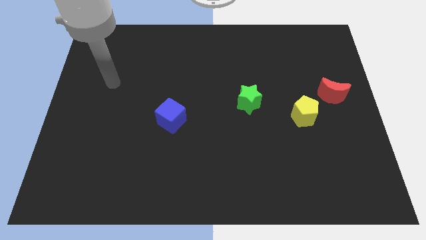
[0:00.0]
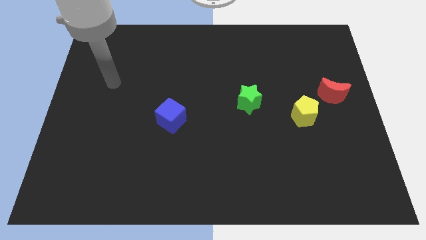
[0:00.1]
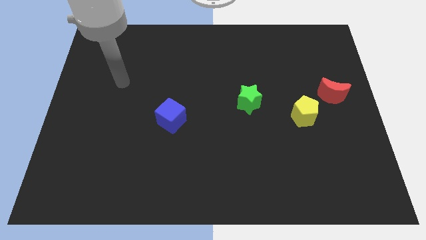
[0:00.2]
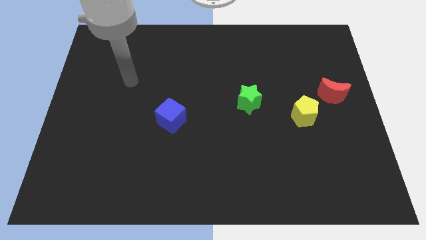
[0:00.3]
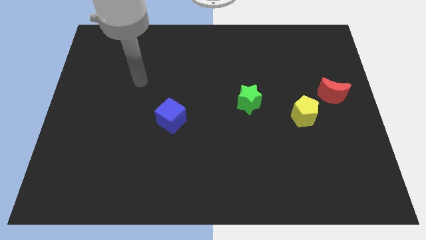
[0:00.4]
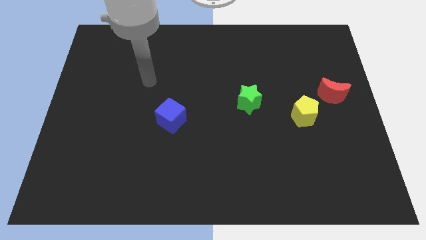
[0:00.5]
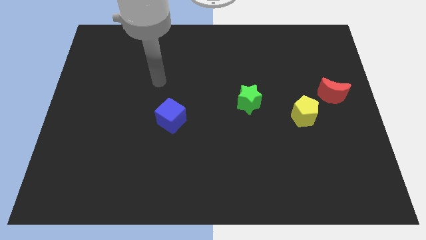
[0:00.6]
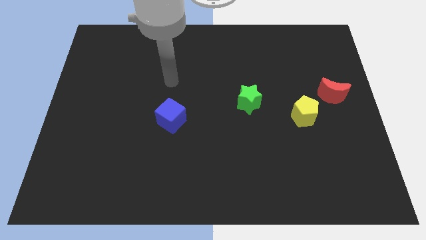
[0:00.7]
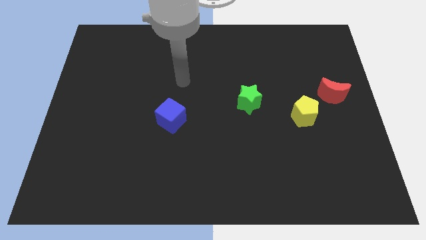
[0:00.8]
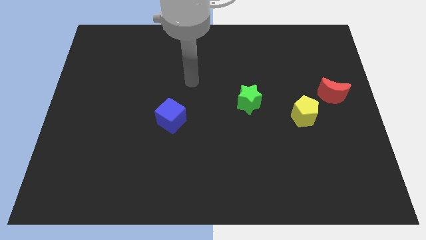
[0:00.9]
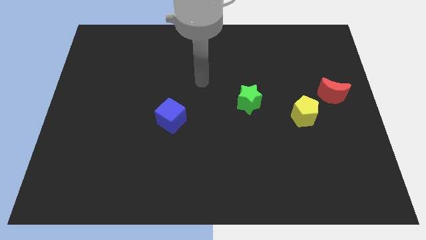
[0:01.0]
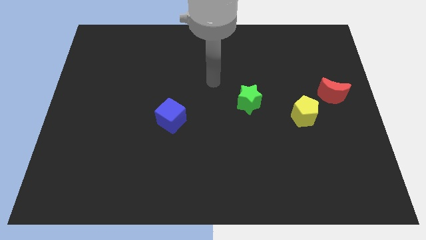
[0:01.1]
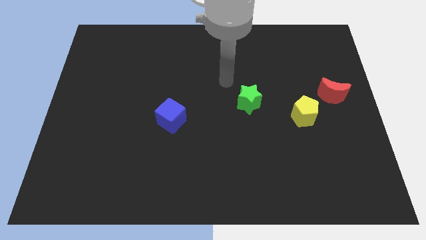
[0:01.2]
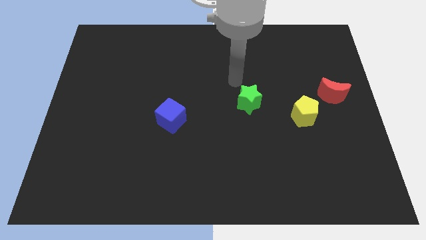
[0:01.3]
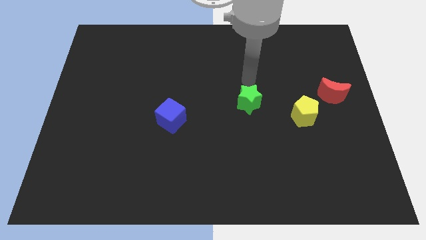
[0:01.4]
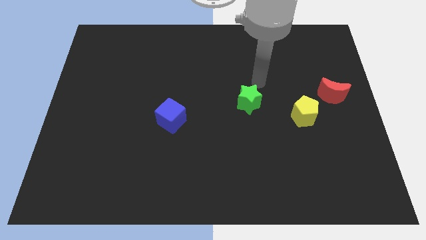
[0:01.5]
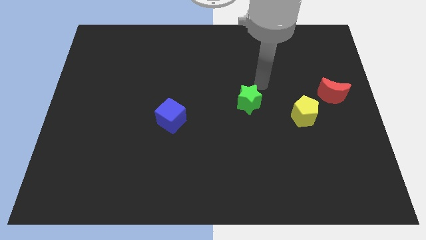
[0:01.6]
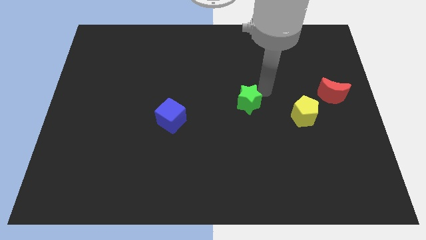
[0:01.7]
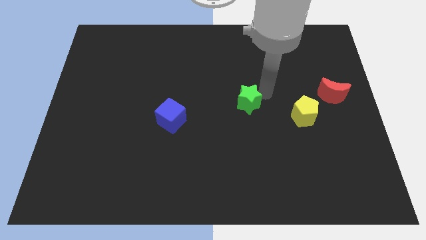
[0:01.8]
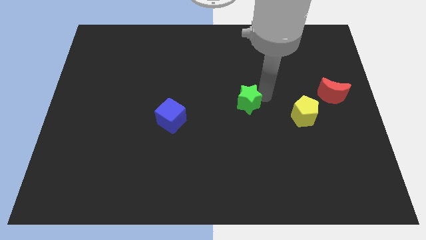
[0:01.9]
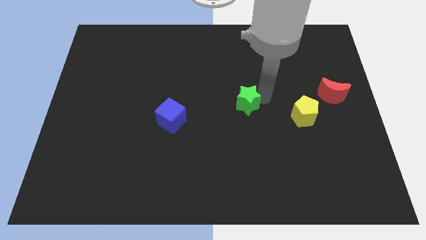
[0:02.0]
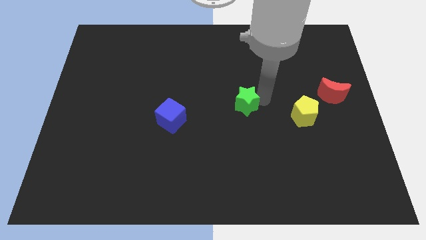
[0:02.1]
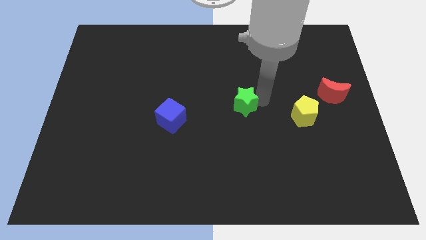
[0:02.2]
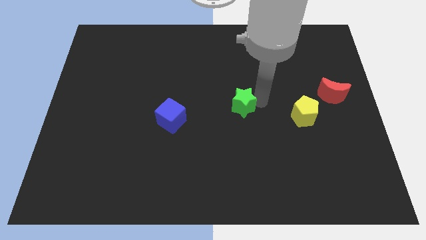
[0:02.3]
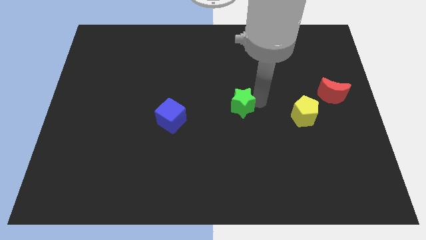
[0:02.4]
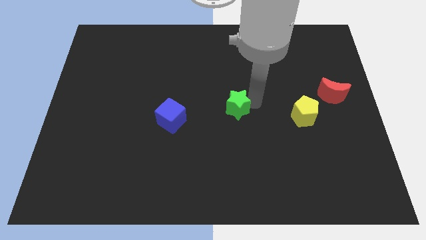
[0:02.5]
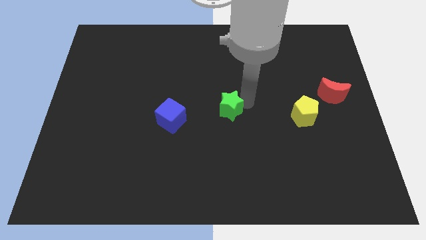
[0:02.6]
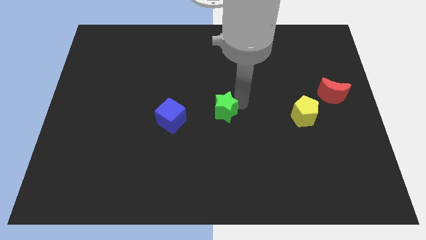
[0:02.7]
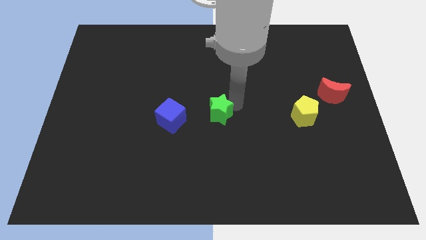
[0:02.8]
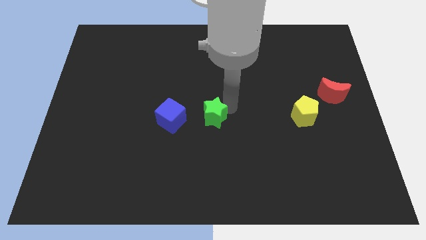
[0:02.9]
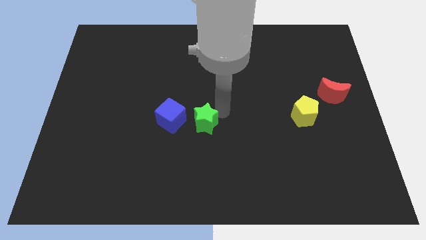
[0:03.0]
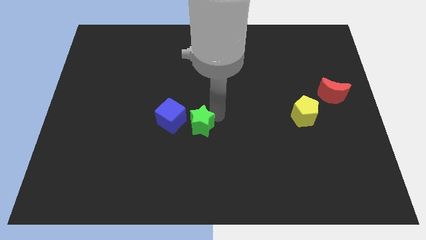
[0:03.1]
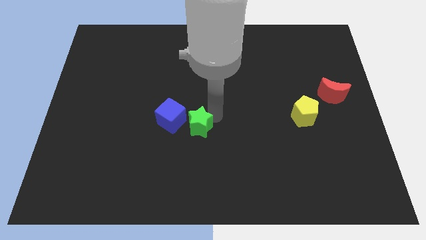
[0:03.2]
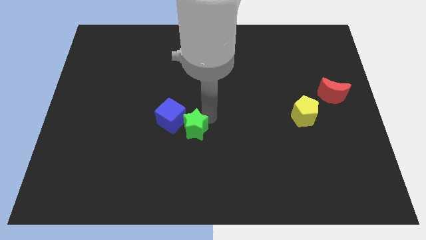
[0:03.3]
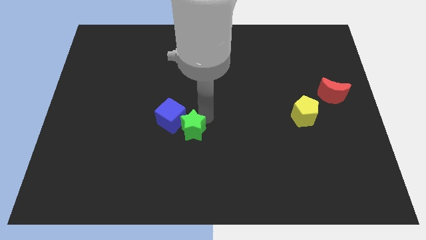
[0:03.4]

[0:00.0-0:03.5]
slide the green star next to the blue block

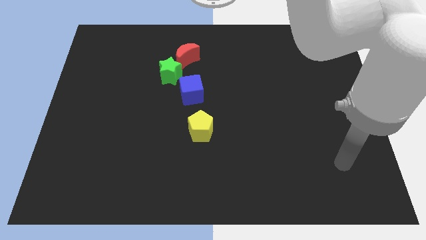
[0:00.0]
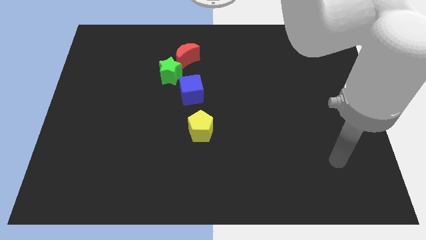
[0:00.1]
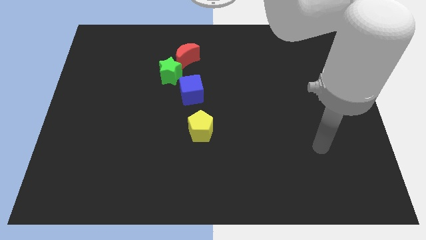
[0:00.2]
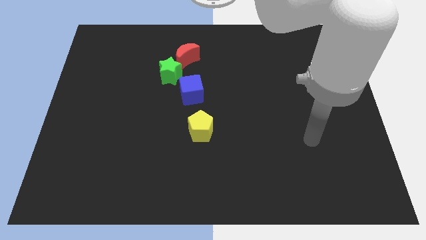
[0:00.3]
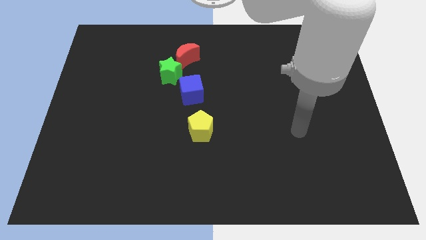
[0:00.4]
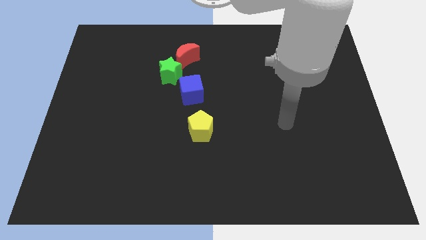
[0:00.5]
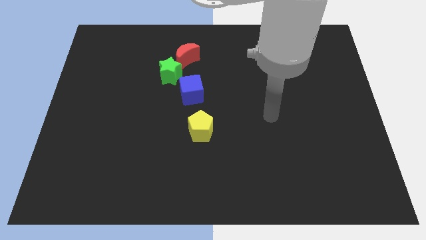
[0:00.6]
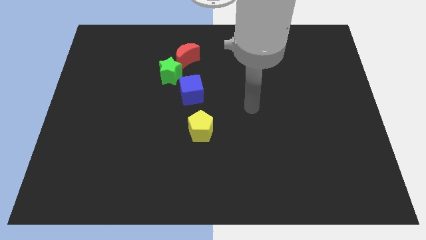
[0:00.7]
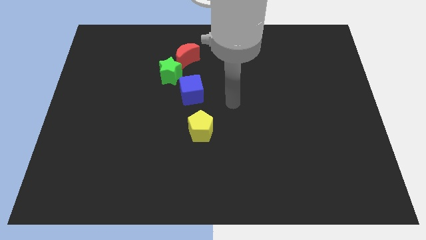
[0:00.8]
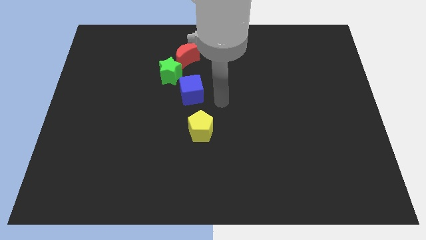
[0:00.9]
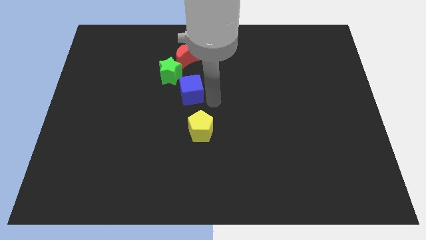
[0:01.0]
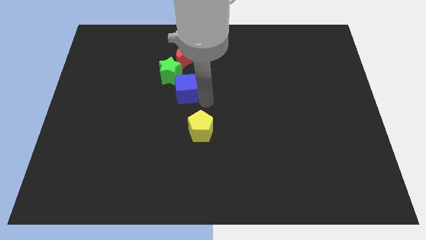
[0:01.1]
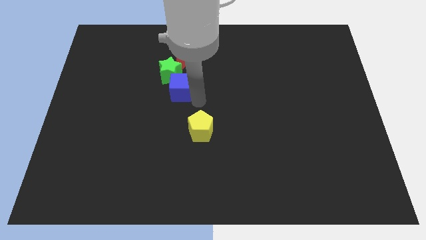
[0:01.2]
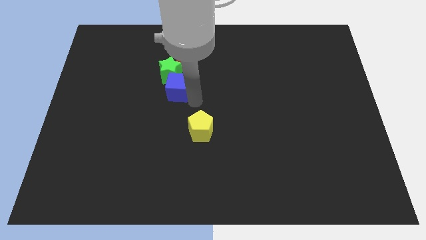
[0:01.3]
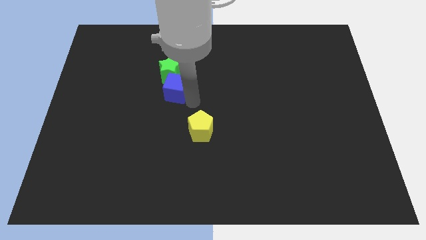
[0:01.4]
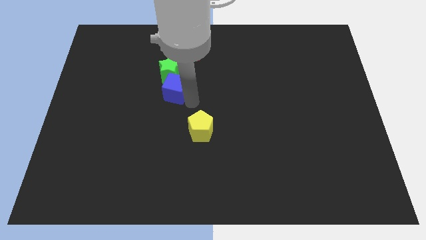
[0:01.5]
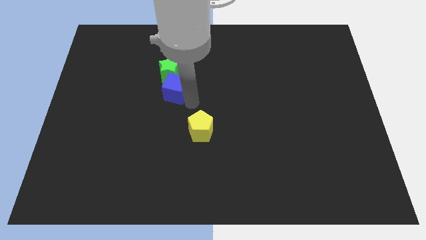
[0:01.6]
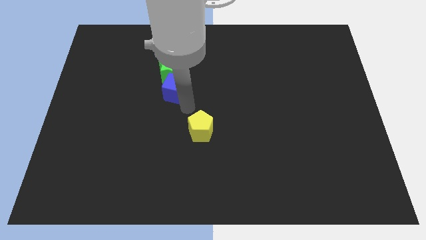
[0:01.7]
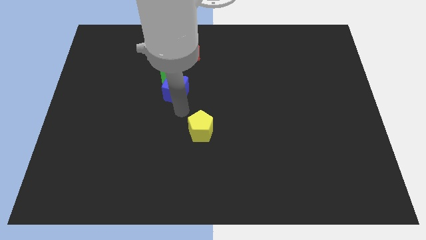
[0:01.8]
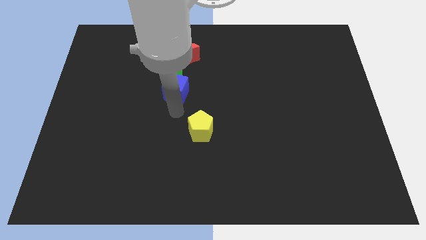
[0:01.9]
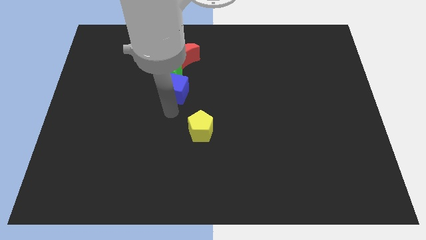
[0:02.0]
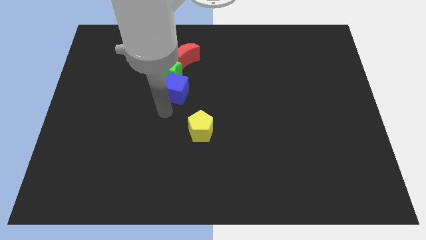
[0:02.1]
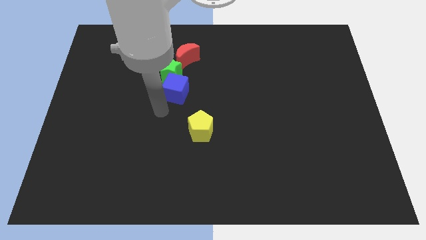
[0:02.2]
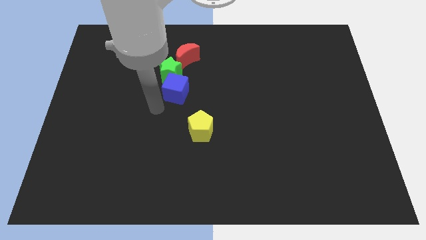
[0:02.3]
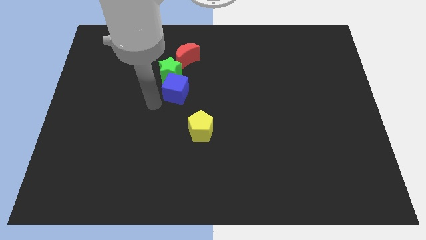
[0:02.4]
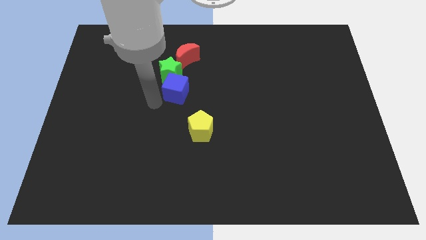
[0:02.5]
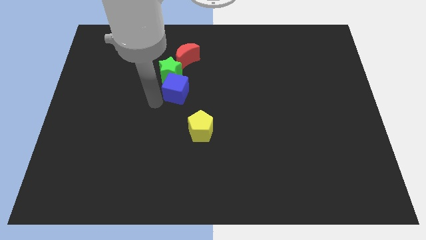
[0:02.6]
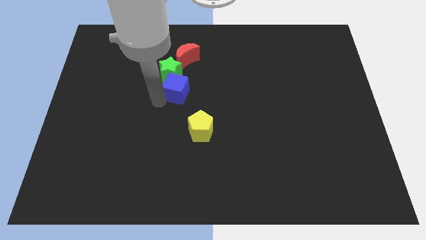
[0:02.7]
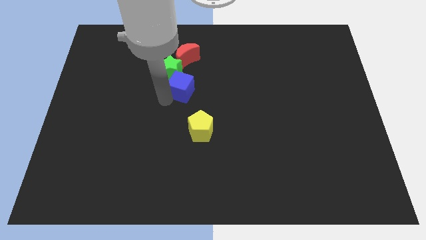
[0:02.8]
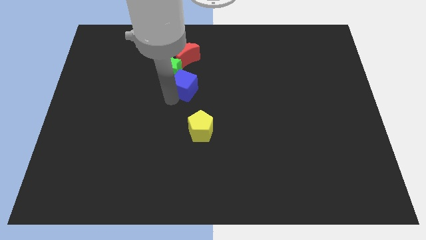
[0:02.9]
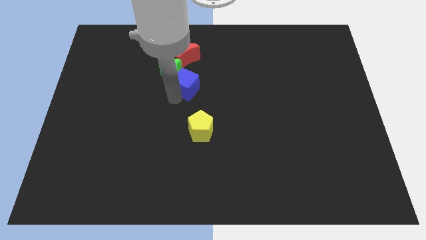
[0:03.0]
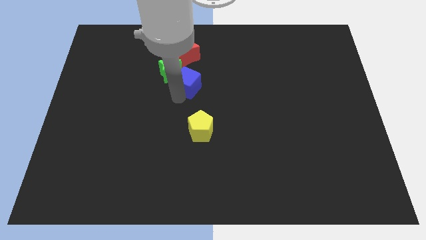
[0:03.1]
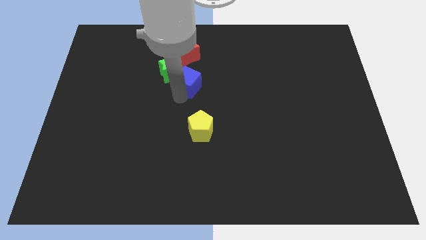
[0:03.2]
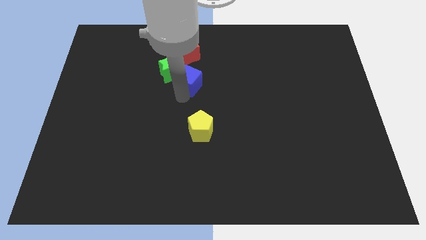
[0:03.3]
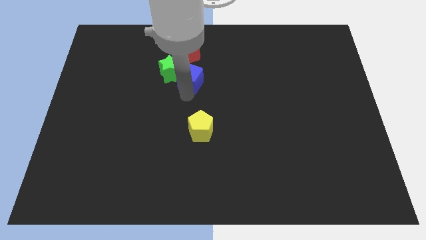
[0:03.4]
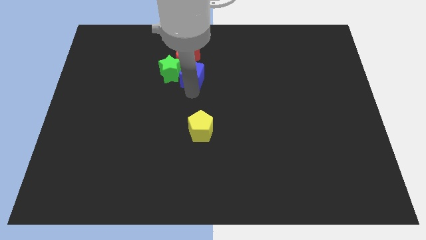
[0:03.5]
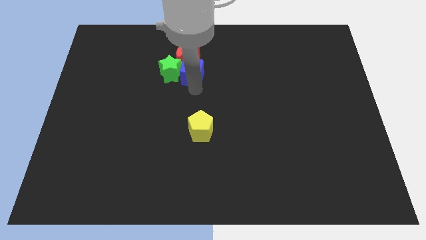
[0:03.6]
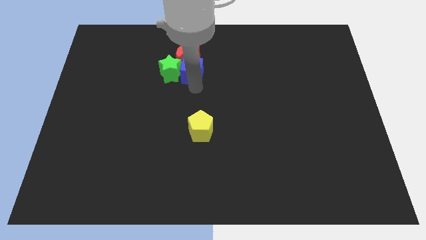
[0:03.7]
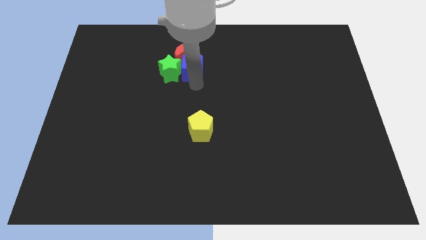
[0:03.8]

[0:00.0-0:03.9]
put the blue block close to the red moon

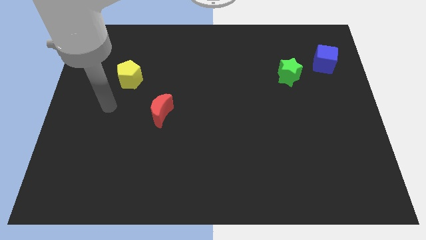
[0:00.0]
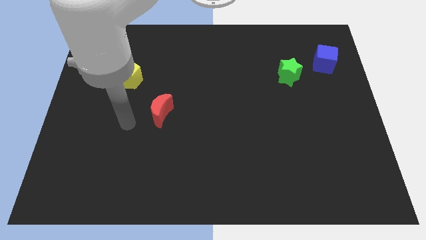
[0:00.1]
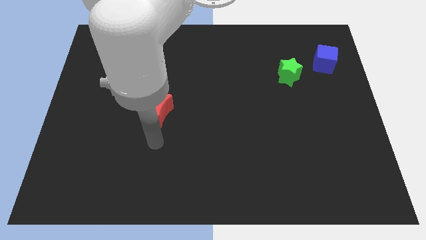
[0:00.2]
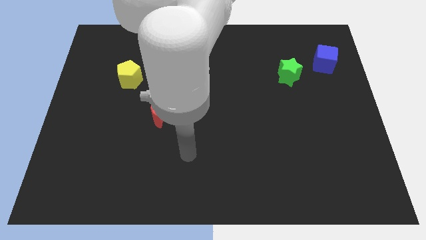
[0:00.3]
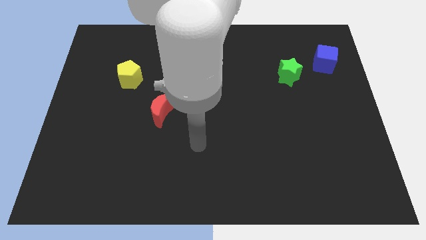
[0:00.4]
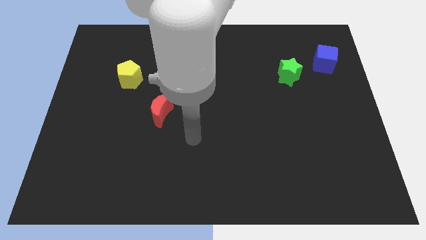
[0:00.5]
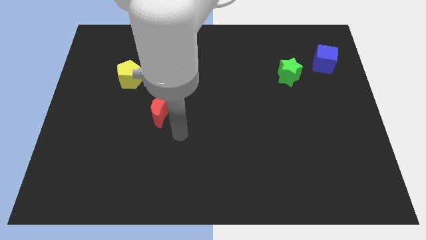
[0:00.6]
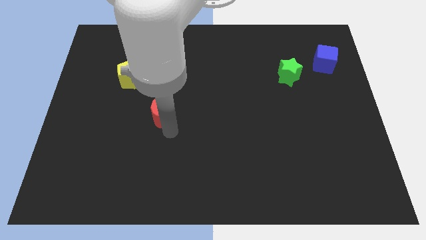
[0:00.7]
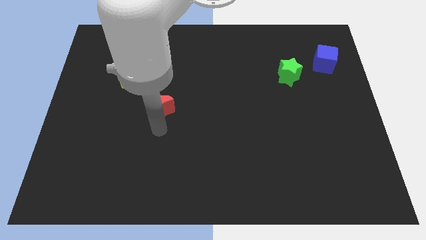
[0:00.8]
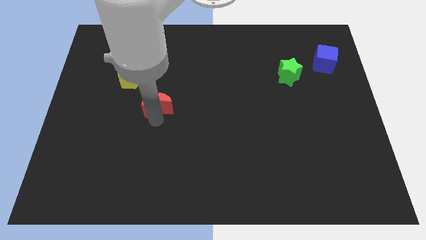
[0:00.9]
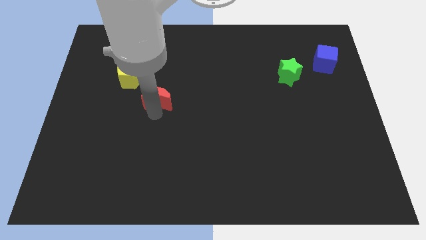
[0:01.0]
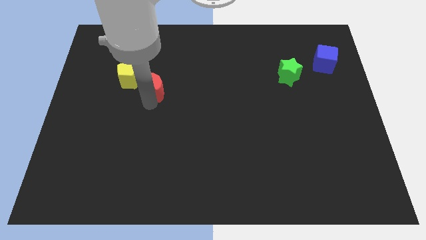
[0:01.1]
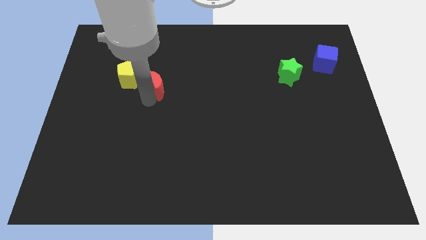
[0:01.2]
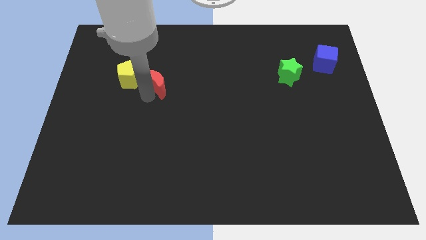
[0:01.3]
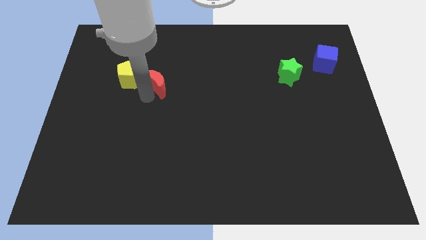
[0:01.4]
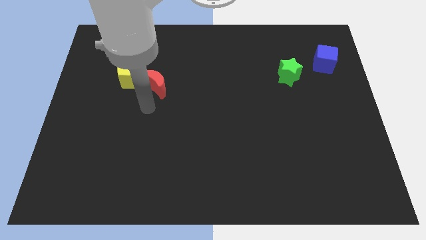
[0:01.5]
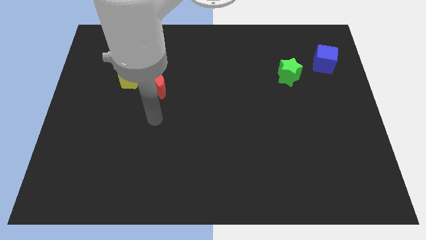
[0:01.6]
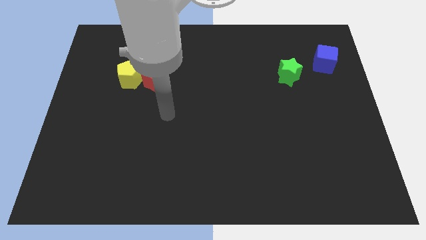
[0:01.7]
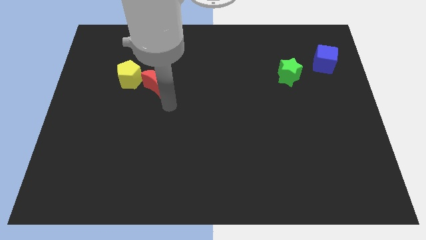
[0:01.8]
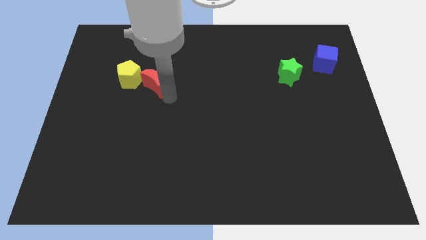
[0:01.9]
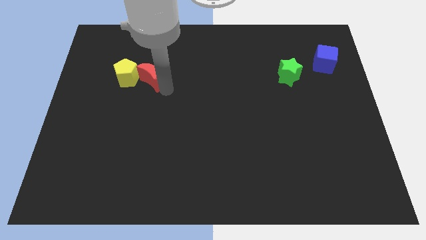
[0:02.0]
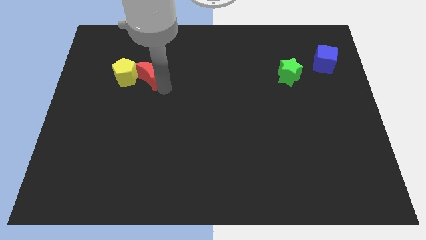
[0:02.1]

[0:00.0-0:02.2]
put the red moon close to the pentagon
